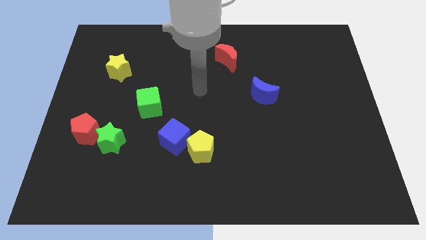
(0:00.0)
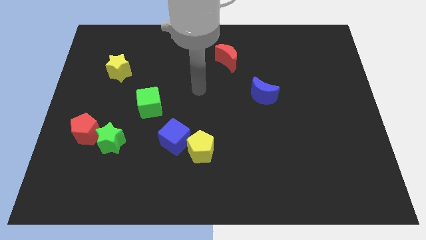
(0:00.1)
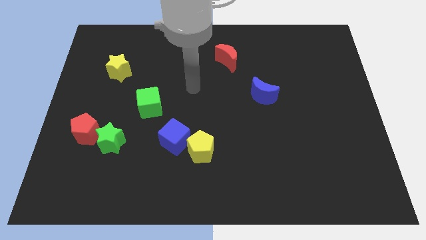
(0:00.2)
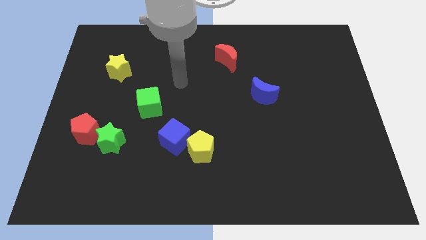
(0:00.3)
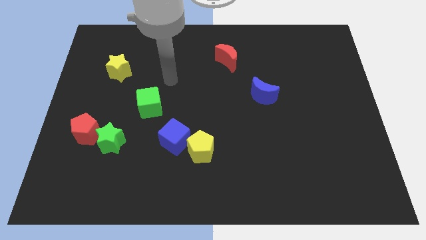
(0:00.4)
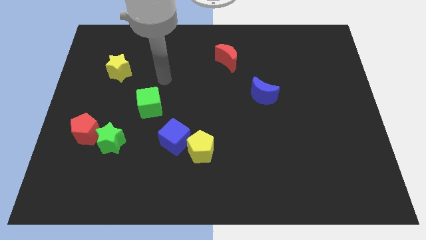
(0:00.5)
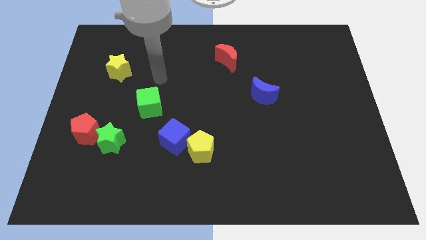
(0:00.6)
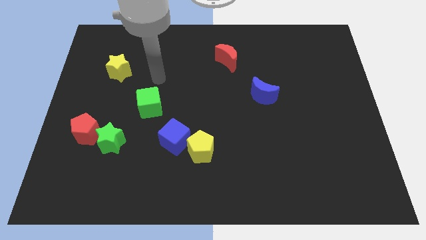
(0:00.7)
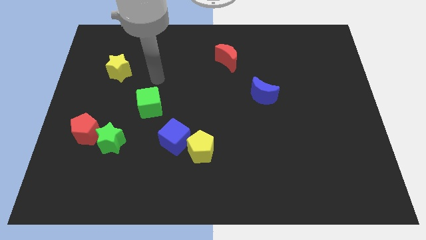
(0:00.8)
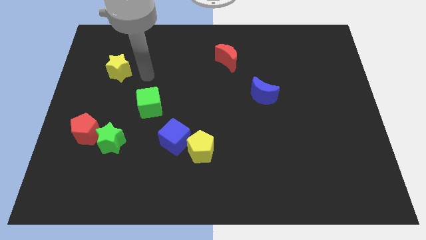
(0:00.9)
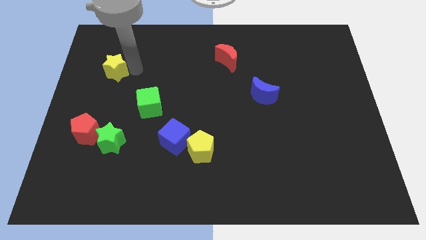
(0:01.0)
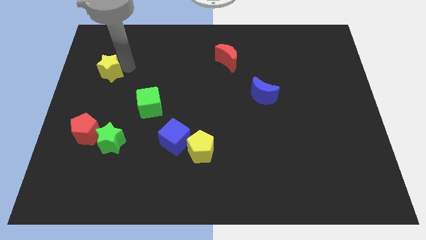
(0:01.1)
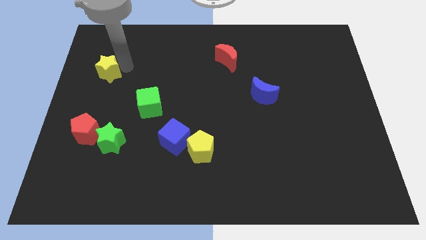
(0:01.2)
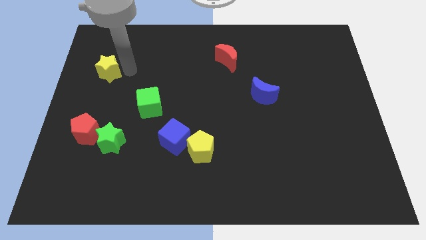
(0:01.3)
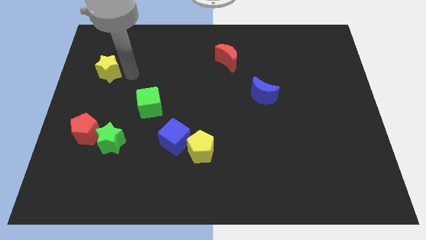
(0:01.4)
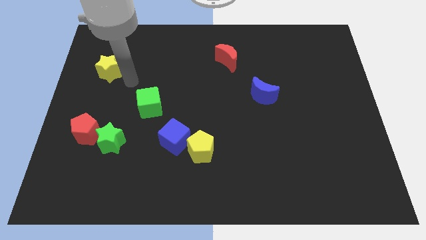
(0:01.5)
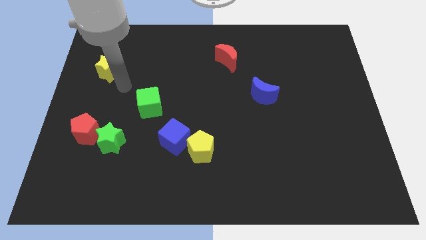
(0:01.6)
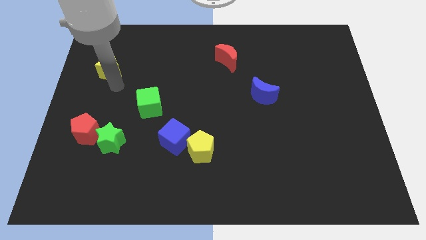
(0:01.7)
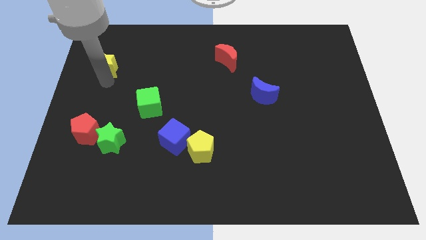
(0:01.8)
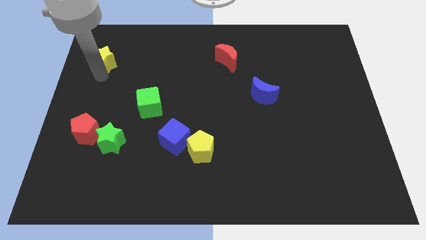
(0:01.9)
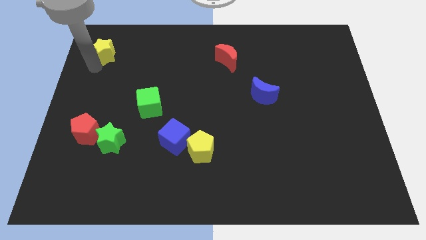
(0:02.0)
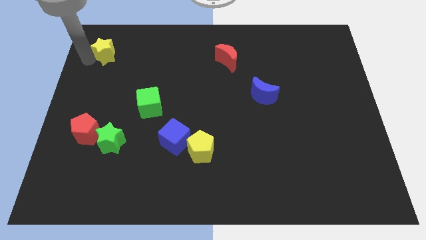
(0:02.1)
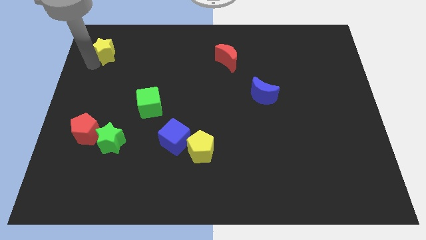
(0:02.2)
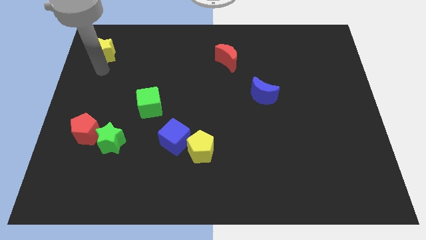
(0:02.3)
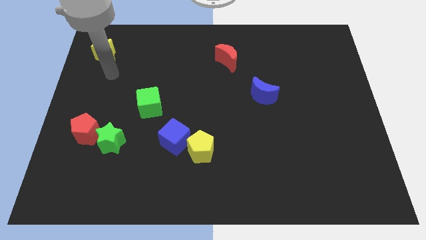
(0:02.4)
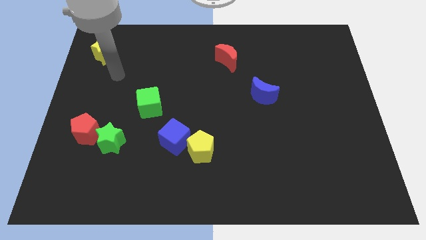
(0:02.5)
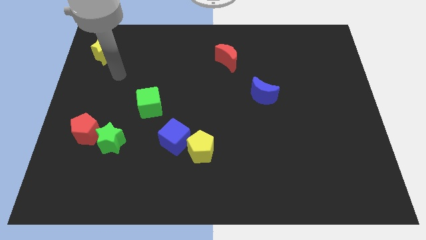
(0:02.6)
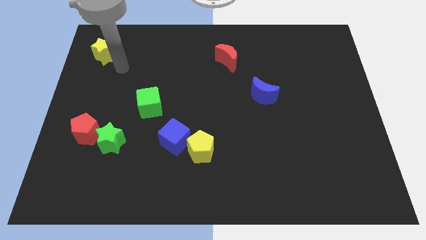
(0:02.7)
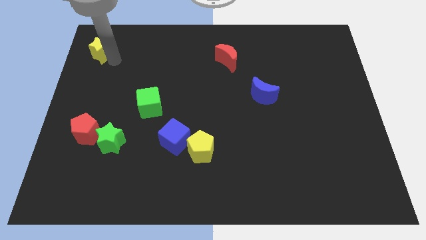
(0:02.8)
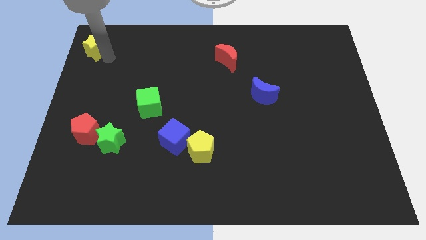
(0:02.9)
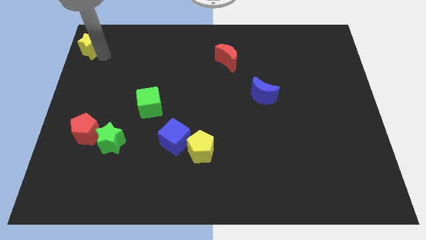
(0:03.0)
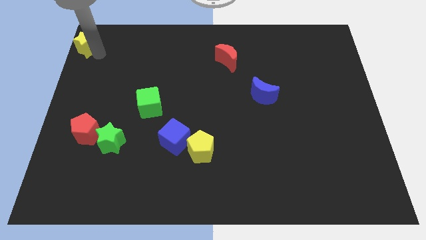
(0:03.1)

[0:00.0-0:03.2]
push the yellow star diagonally top left to the red pentagon

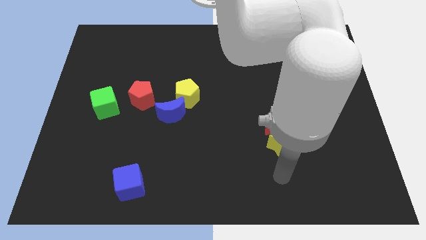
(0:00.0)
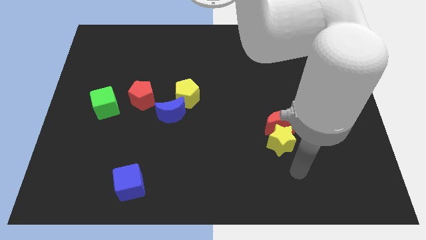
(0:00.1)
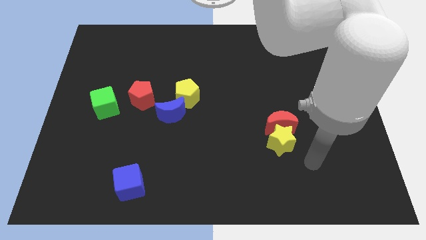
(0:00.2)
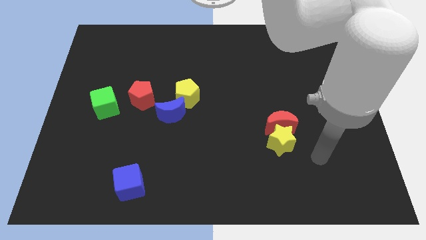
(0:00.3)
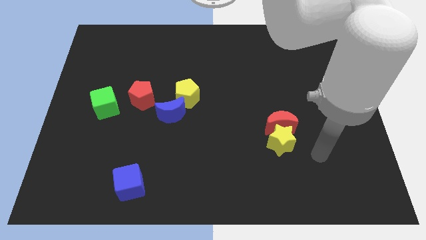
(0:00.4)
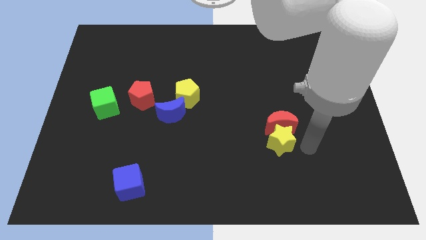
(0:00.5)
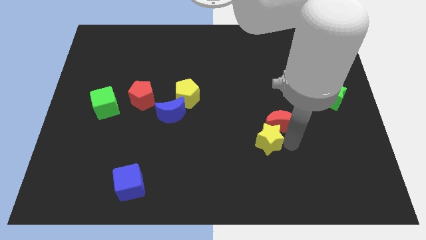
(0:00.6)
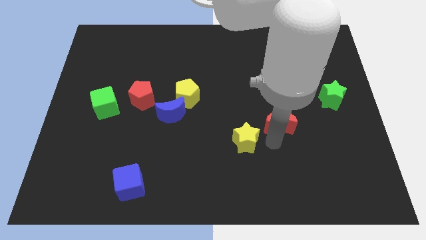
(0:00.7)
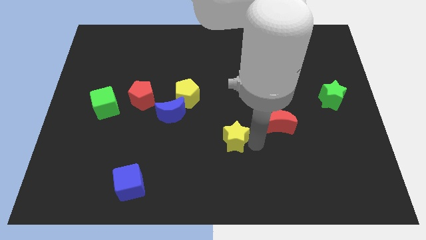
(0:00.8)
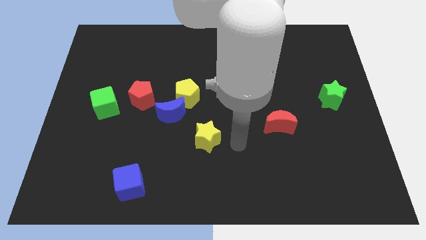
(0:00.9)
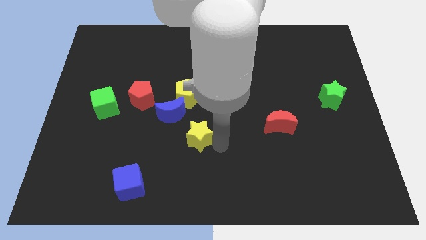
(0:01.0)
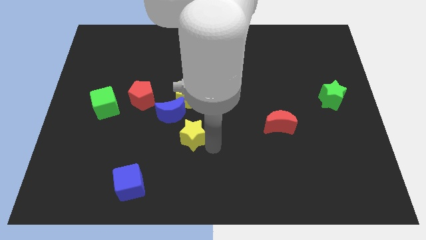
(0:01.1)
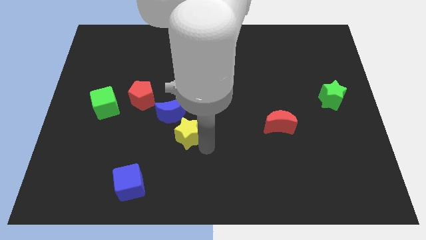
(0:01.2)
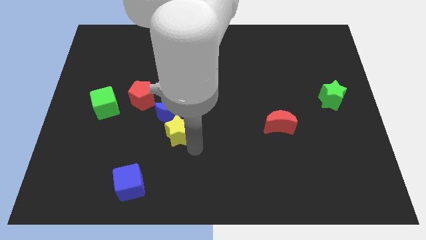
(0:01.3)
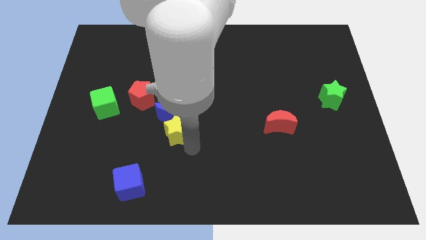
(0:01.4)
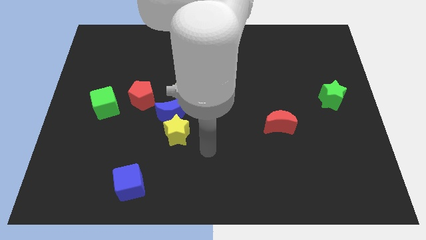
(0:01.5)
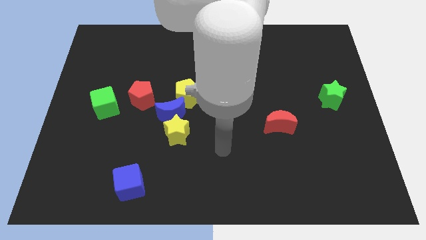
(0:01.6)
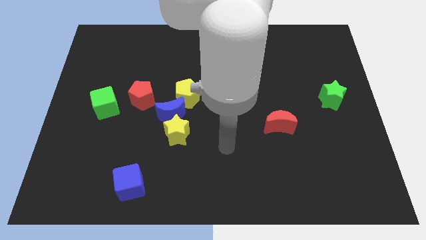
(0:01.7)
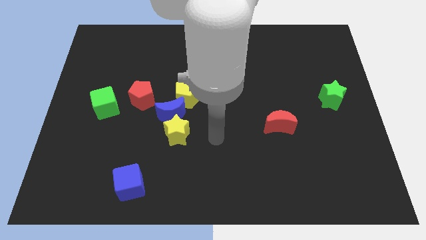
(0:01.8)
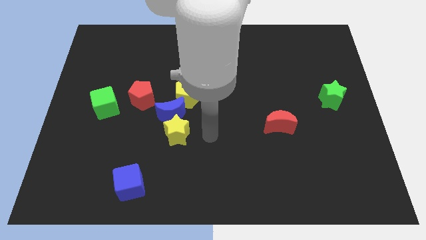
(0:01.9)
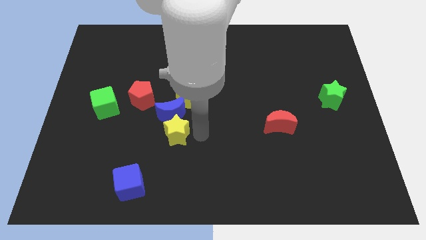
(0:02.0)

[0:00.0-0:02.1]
push the yellow star to bottom of the blue moon

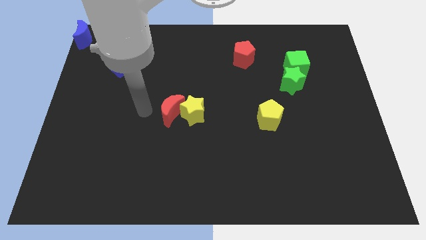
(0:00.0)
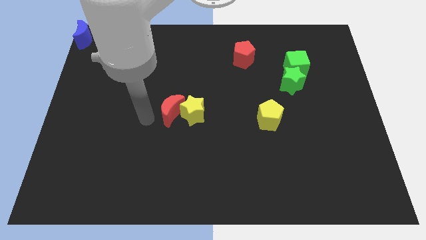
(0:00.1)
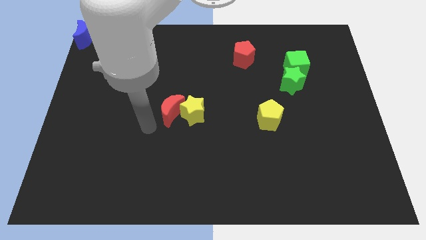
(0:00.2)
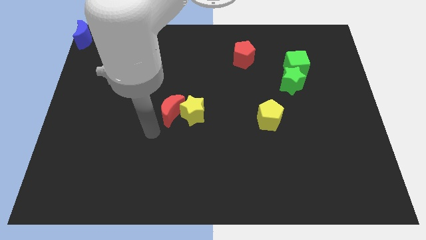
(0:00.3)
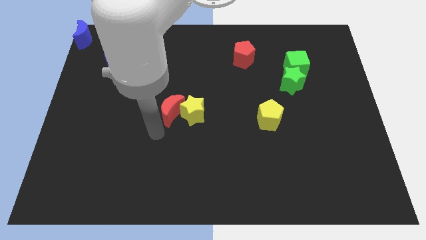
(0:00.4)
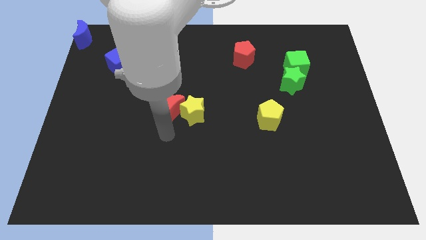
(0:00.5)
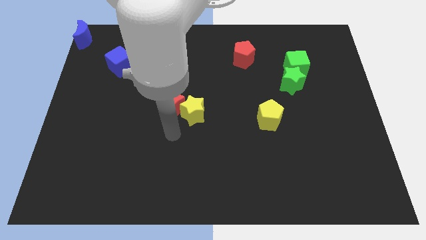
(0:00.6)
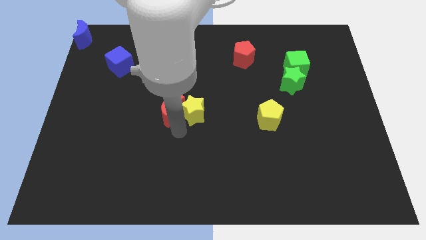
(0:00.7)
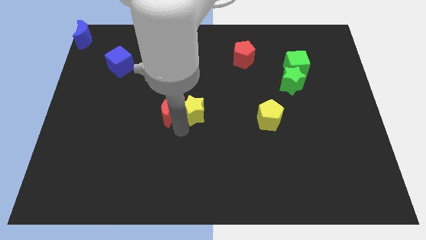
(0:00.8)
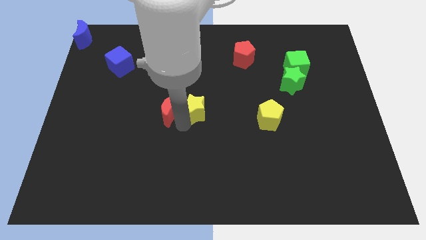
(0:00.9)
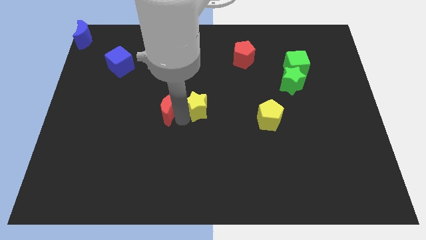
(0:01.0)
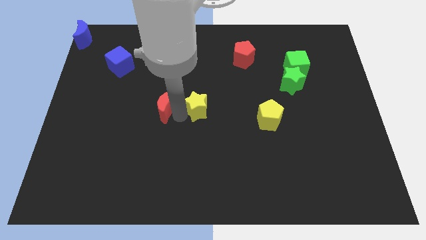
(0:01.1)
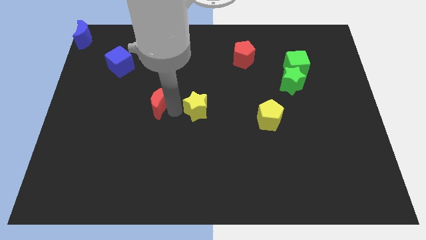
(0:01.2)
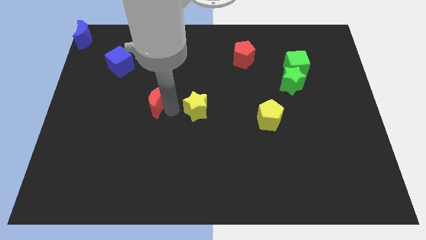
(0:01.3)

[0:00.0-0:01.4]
separate the red moon and yellow star

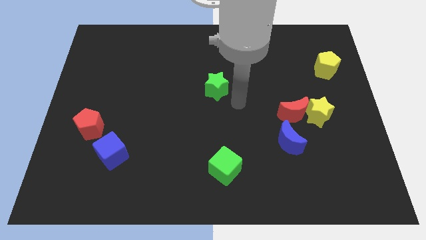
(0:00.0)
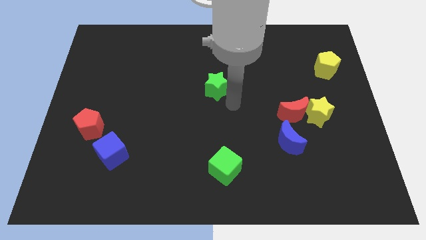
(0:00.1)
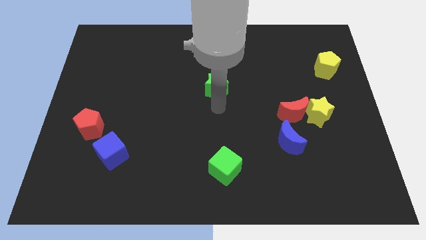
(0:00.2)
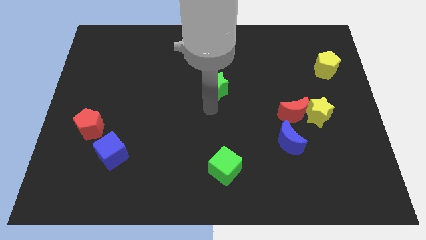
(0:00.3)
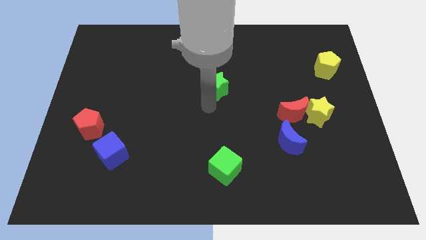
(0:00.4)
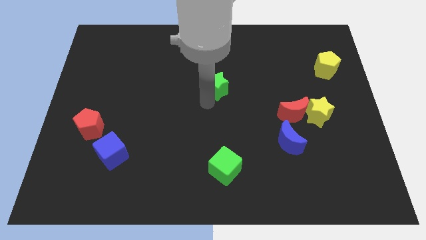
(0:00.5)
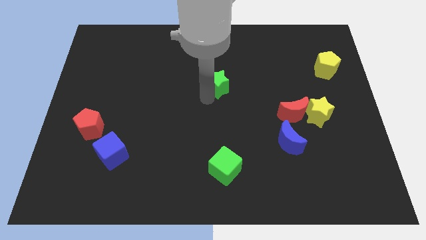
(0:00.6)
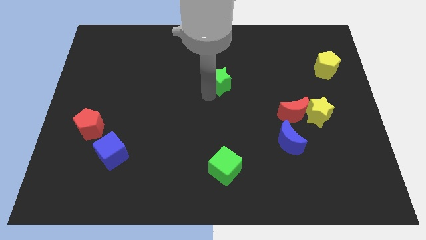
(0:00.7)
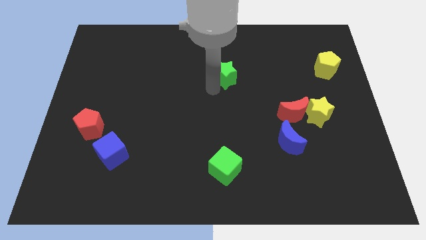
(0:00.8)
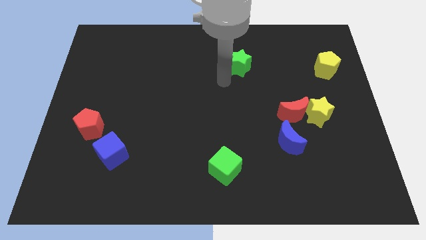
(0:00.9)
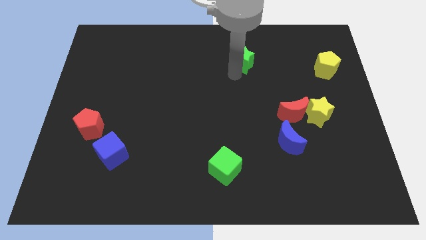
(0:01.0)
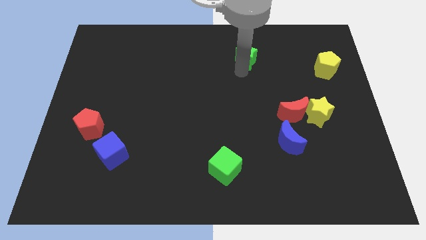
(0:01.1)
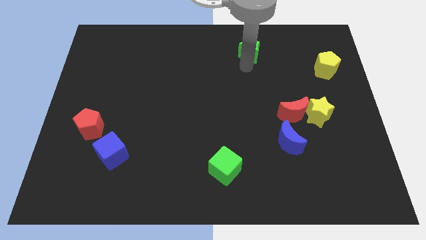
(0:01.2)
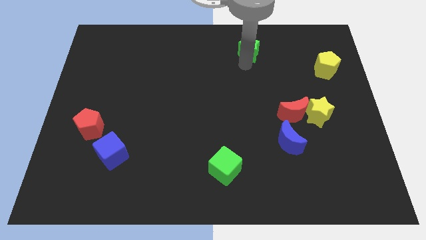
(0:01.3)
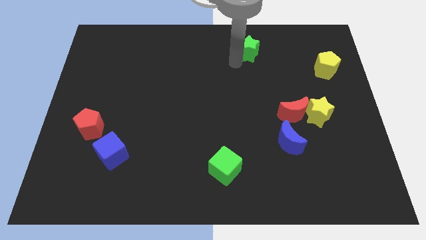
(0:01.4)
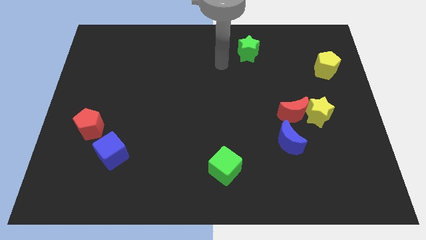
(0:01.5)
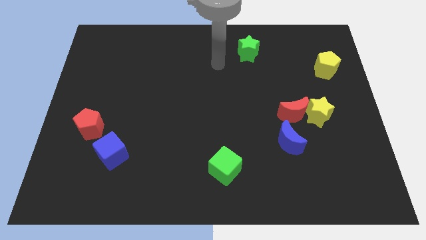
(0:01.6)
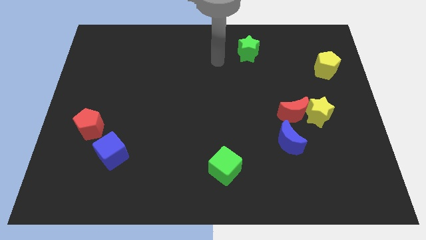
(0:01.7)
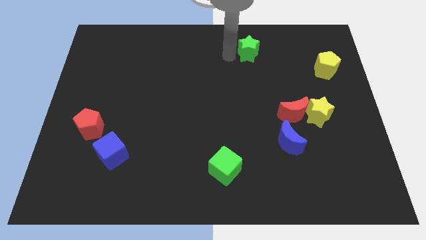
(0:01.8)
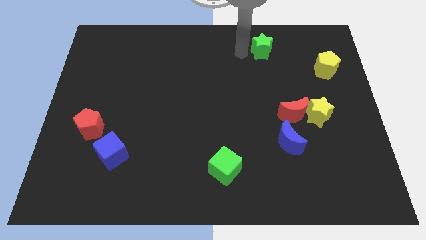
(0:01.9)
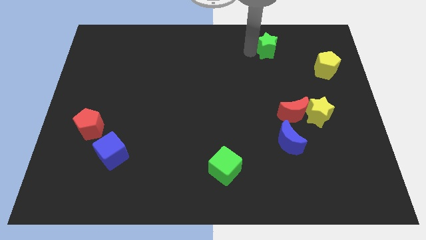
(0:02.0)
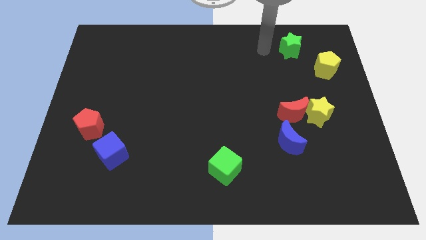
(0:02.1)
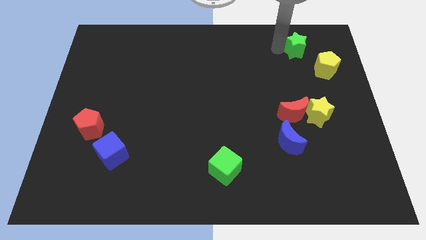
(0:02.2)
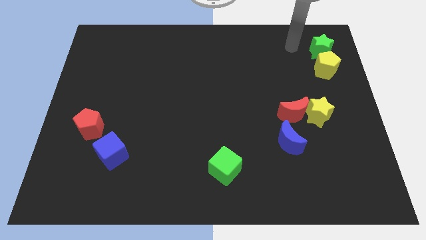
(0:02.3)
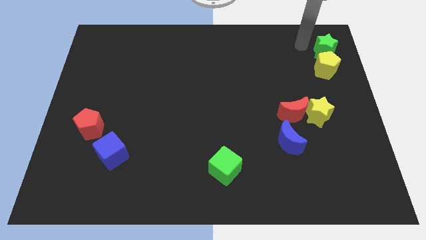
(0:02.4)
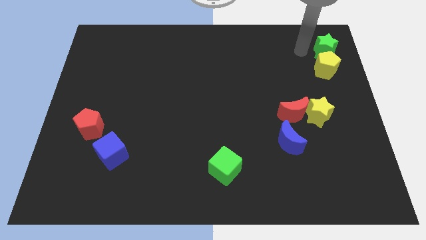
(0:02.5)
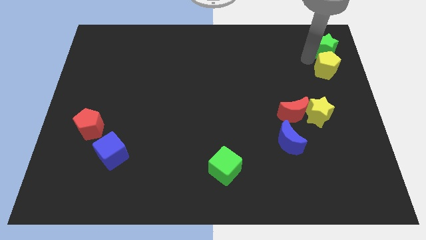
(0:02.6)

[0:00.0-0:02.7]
push the green star to the top of the yellow pentagon
